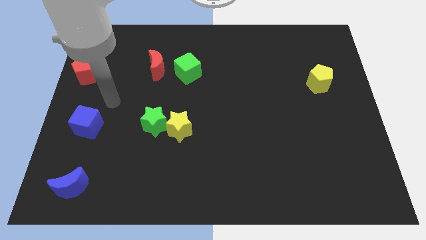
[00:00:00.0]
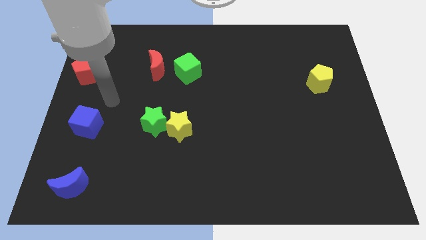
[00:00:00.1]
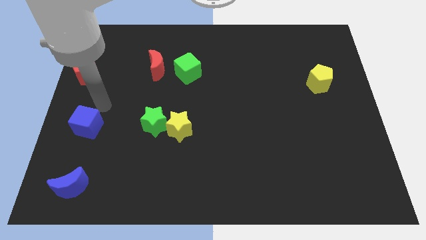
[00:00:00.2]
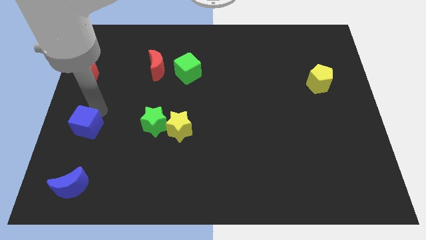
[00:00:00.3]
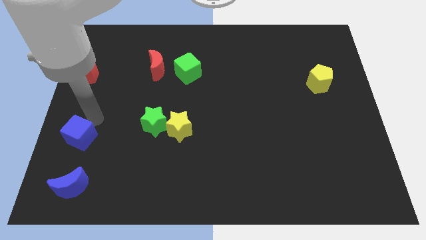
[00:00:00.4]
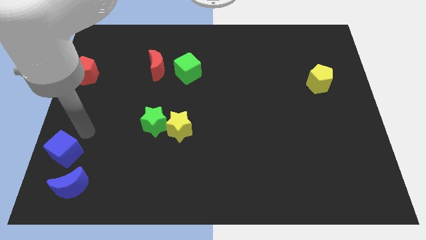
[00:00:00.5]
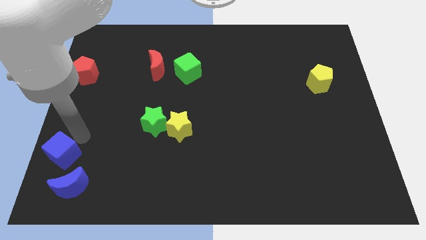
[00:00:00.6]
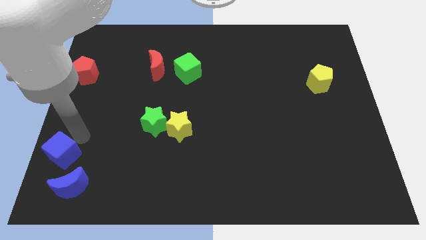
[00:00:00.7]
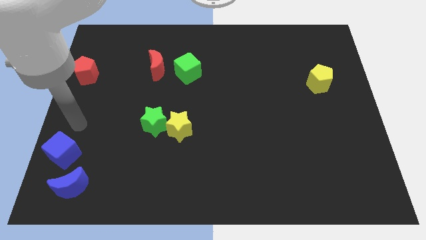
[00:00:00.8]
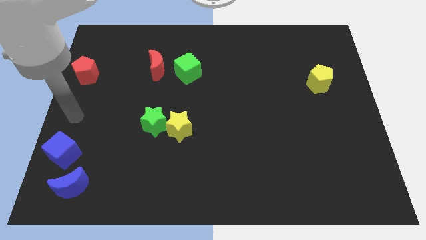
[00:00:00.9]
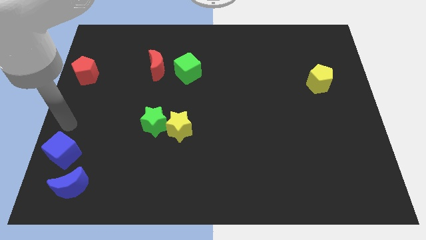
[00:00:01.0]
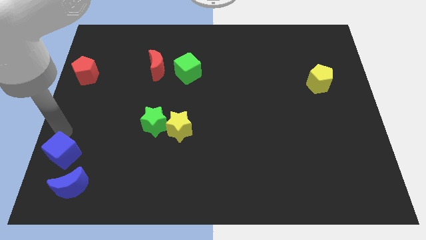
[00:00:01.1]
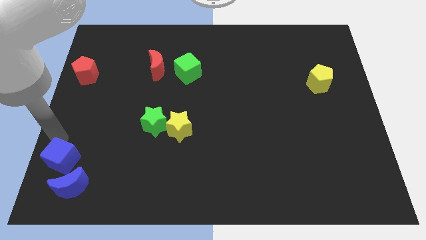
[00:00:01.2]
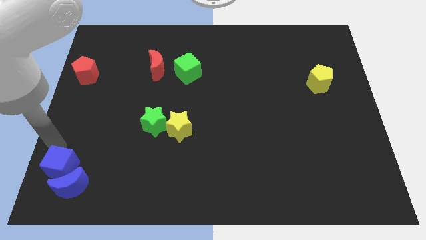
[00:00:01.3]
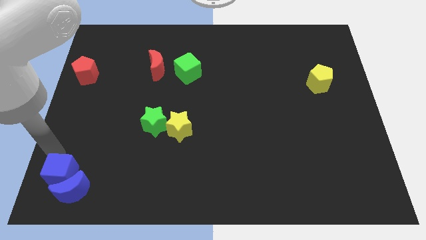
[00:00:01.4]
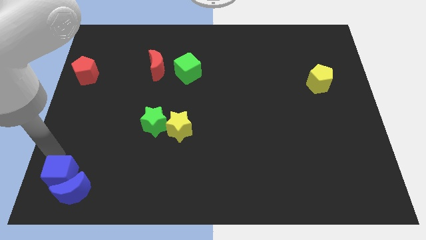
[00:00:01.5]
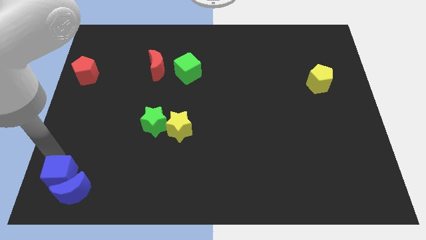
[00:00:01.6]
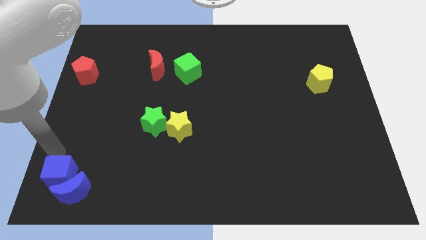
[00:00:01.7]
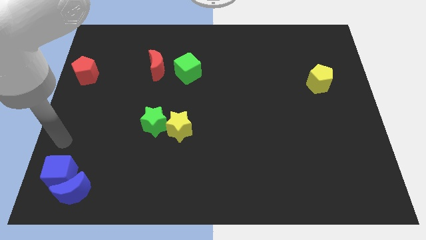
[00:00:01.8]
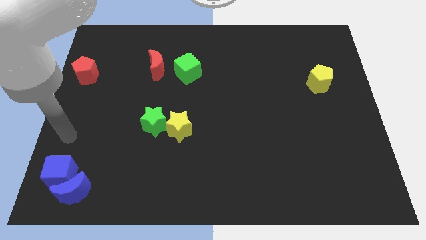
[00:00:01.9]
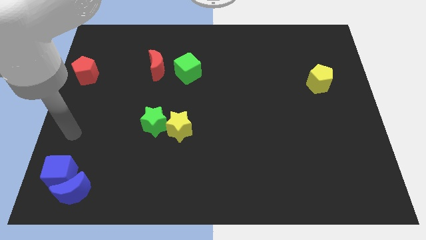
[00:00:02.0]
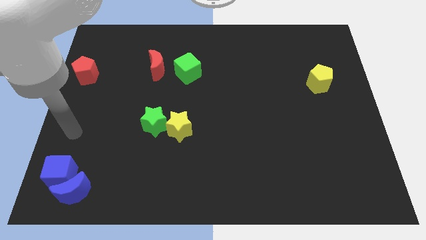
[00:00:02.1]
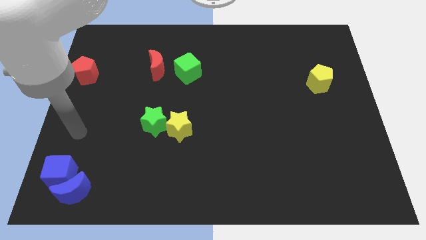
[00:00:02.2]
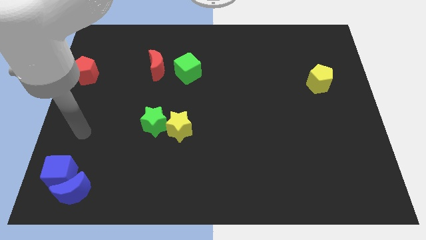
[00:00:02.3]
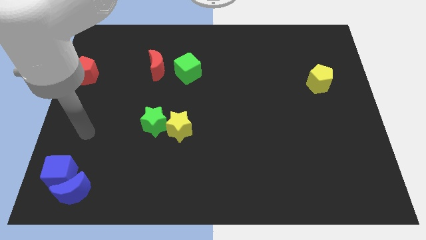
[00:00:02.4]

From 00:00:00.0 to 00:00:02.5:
push the blue cube to the top of the blue moon

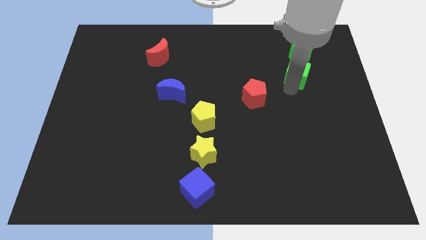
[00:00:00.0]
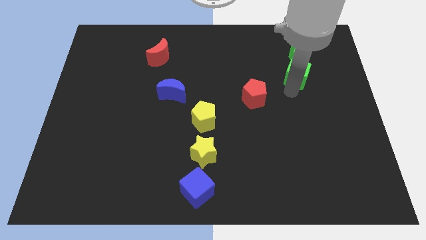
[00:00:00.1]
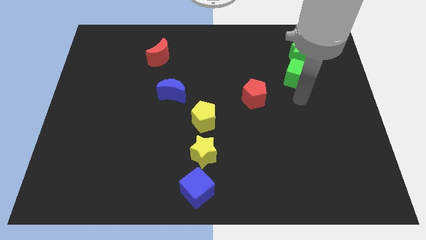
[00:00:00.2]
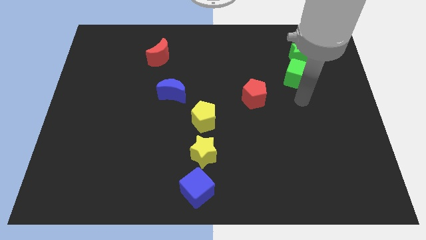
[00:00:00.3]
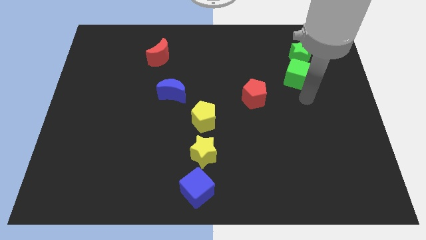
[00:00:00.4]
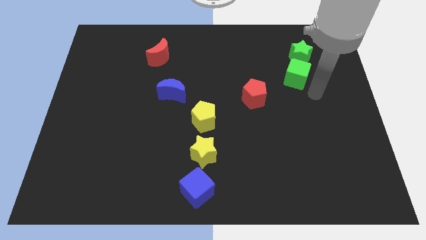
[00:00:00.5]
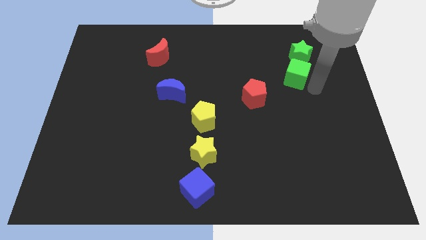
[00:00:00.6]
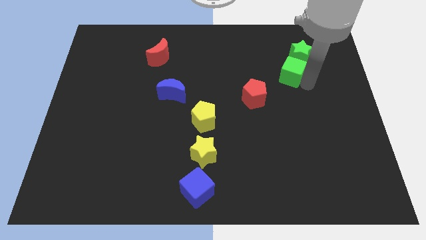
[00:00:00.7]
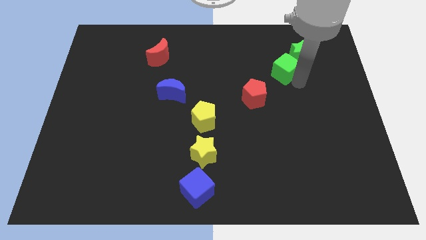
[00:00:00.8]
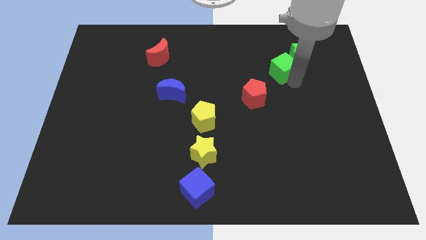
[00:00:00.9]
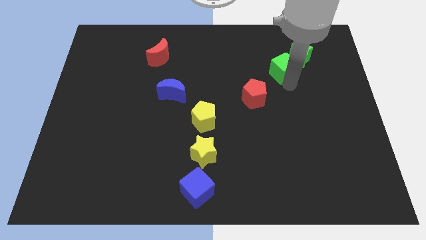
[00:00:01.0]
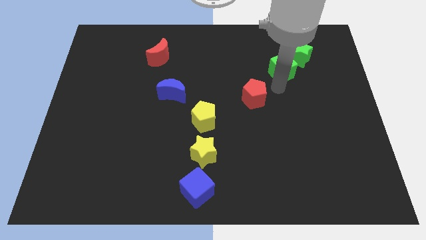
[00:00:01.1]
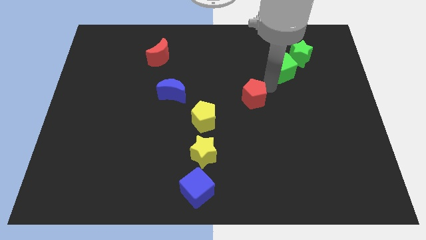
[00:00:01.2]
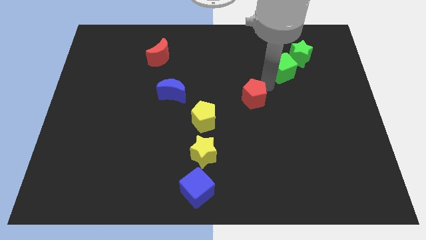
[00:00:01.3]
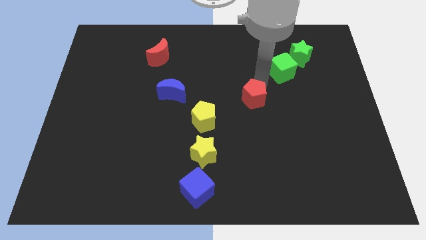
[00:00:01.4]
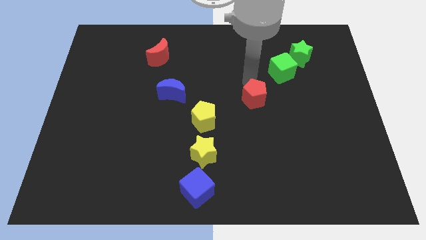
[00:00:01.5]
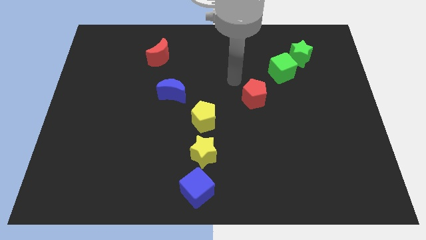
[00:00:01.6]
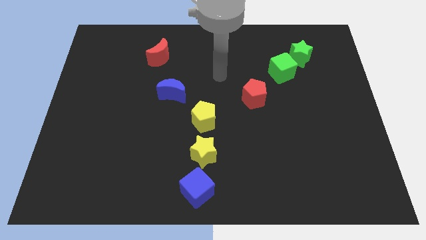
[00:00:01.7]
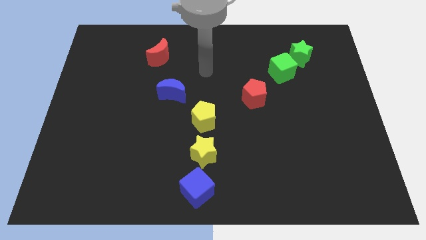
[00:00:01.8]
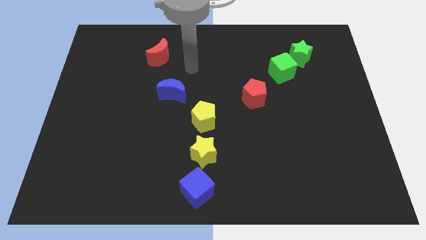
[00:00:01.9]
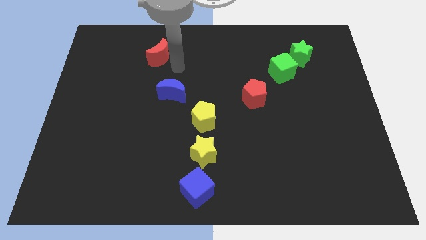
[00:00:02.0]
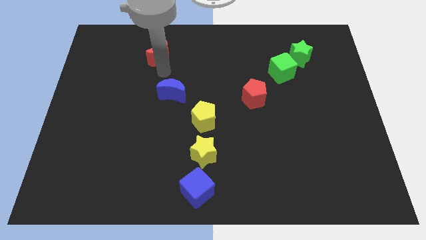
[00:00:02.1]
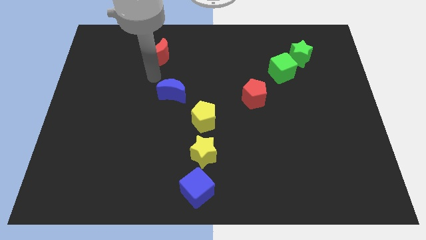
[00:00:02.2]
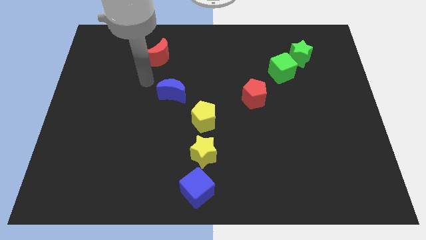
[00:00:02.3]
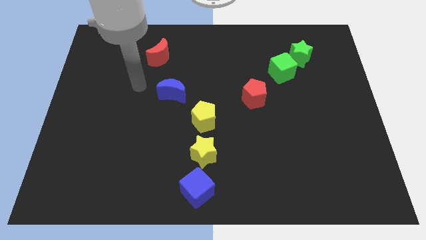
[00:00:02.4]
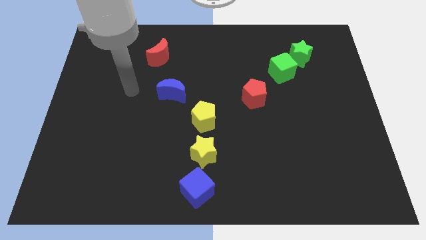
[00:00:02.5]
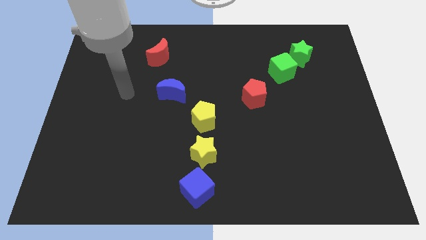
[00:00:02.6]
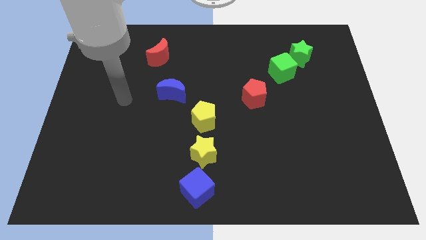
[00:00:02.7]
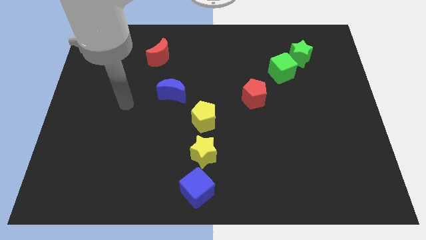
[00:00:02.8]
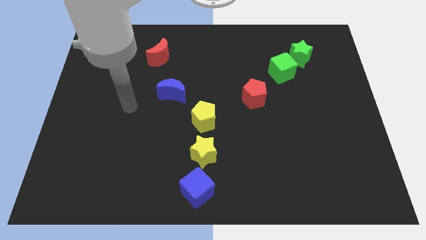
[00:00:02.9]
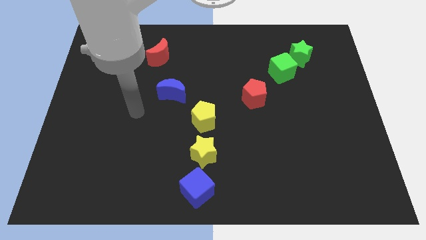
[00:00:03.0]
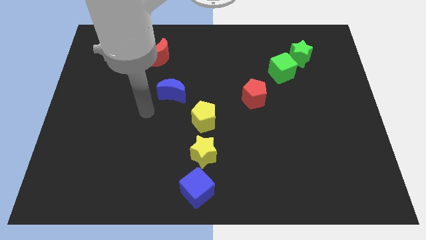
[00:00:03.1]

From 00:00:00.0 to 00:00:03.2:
slide the green cube diagonally bottom left to the green star

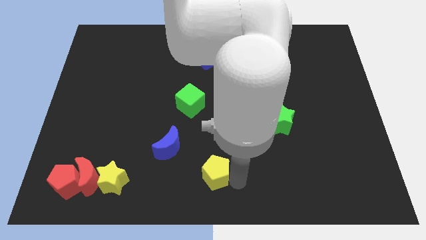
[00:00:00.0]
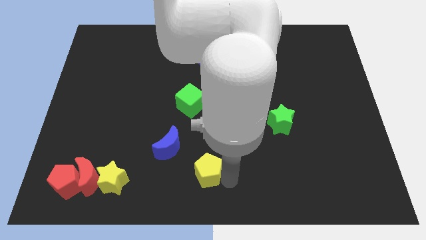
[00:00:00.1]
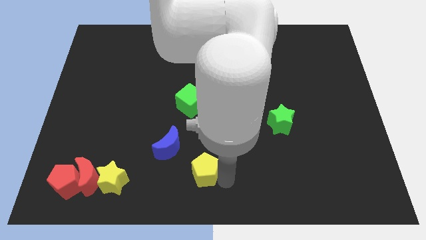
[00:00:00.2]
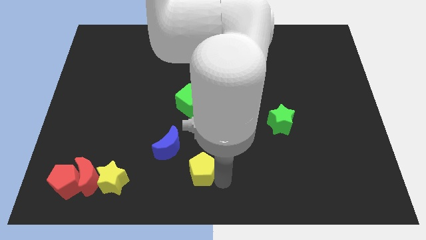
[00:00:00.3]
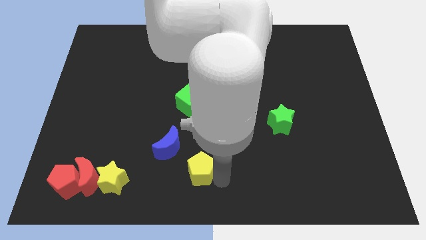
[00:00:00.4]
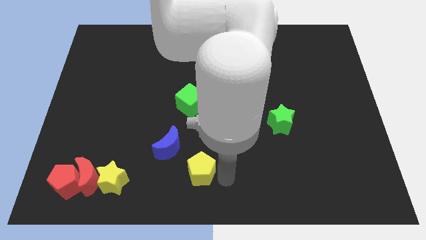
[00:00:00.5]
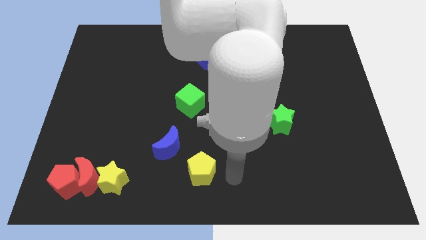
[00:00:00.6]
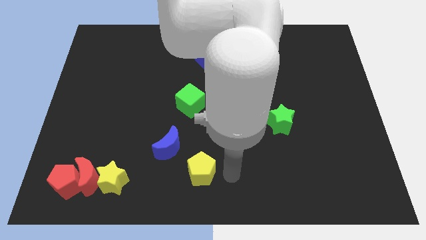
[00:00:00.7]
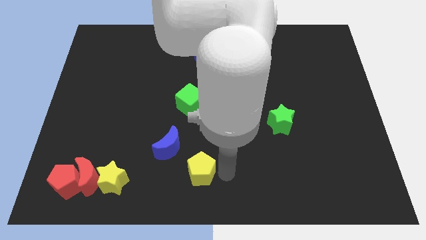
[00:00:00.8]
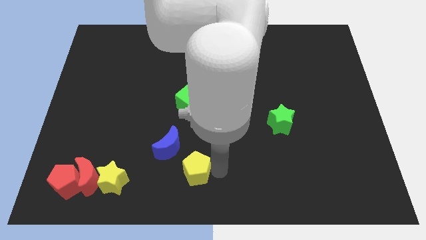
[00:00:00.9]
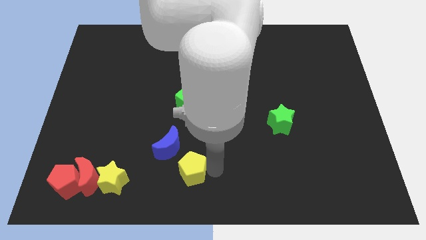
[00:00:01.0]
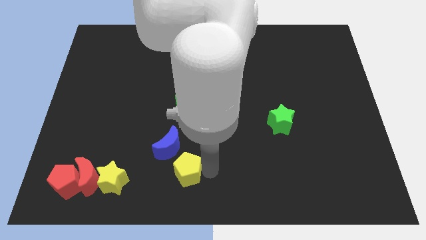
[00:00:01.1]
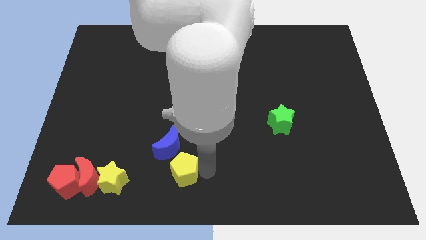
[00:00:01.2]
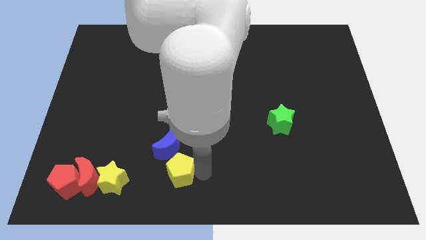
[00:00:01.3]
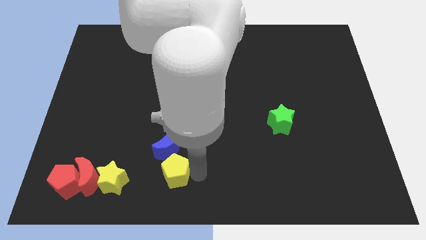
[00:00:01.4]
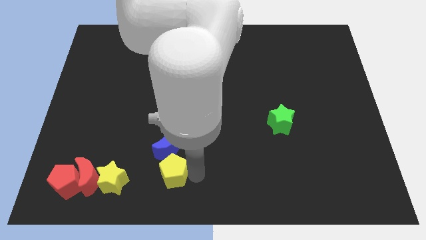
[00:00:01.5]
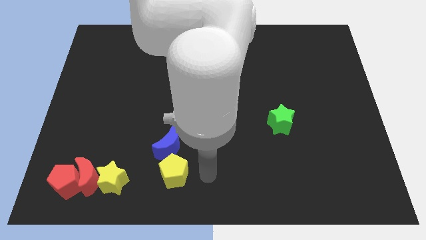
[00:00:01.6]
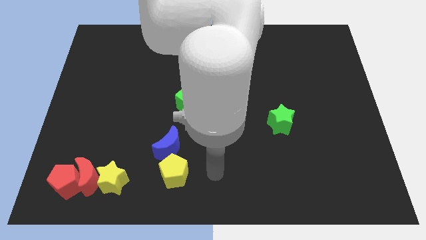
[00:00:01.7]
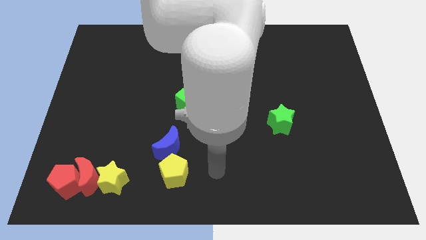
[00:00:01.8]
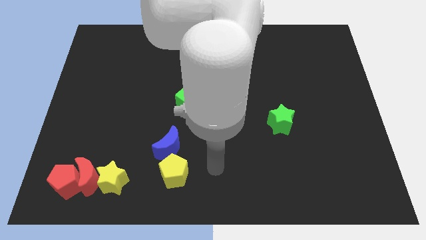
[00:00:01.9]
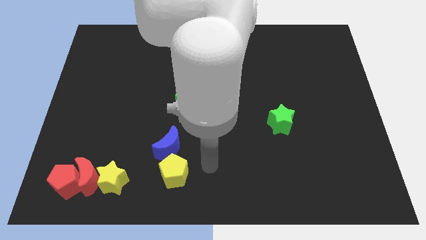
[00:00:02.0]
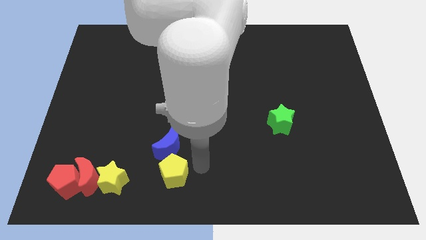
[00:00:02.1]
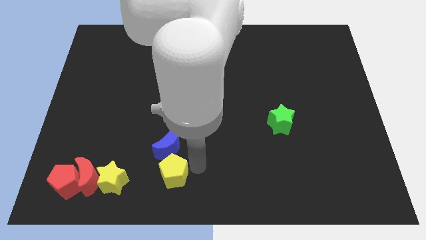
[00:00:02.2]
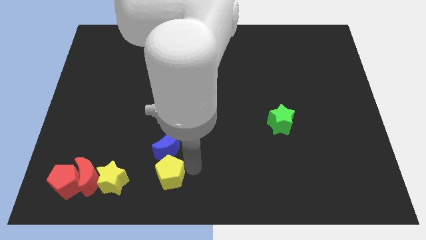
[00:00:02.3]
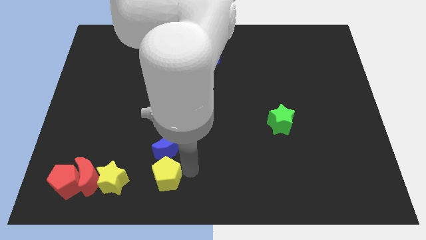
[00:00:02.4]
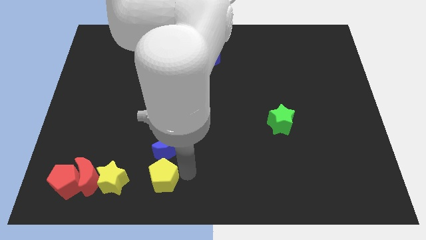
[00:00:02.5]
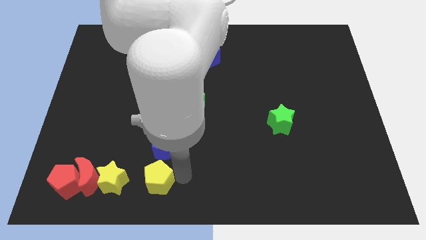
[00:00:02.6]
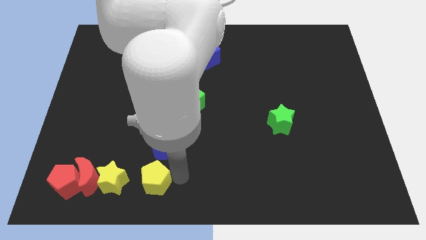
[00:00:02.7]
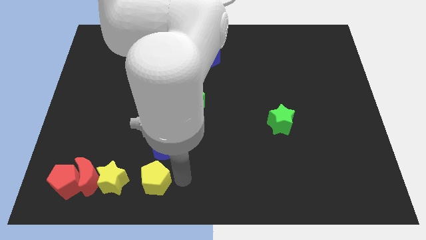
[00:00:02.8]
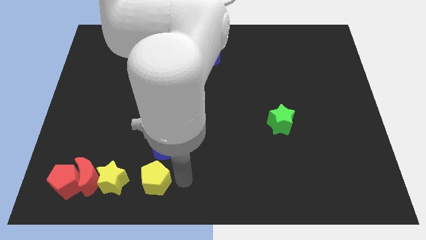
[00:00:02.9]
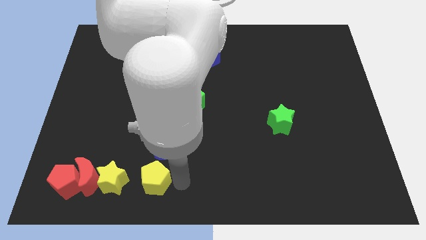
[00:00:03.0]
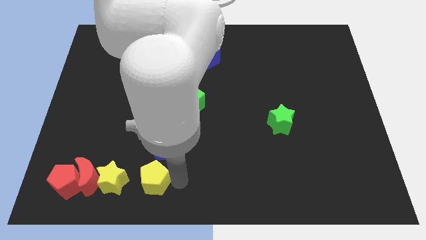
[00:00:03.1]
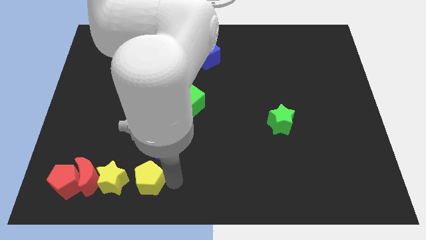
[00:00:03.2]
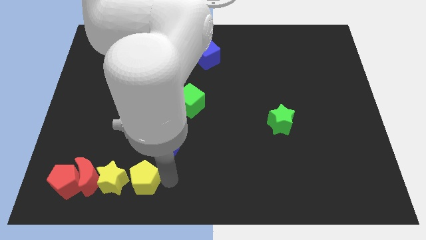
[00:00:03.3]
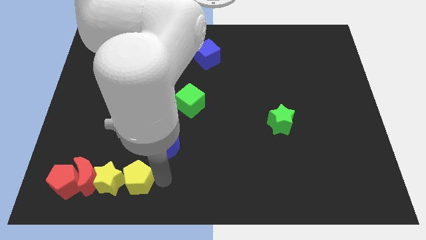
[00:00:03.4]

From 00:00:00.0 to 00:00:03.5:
place the yellow pentagon right to the yellow star
